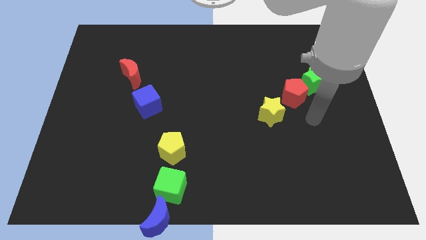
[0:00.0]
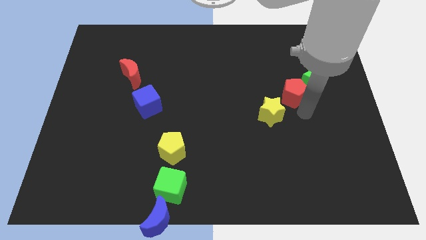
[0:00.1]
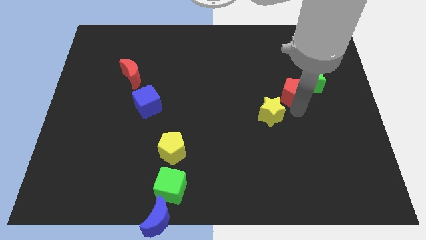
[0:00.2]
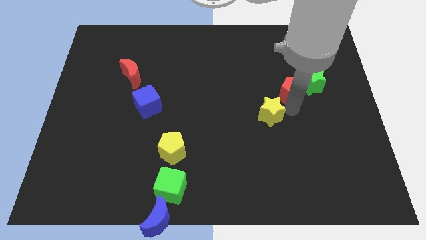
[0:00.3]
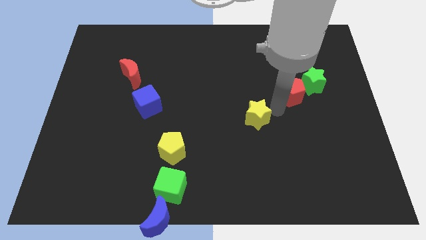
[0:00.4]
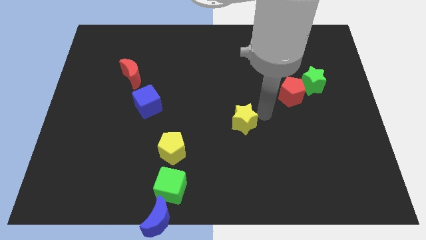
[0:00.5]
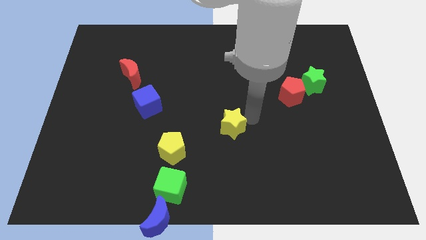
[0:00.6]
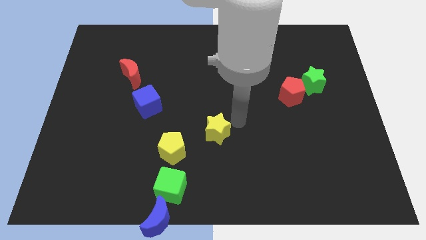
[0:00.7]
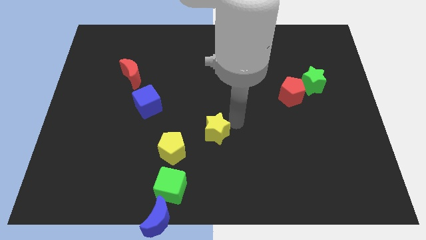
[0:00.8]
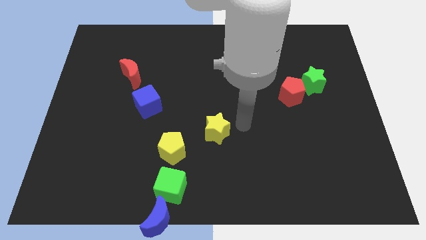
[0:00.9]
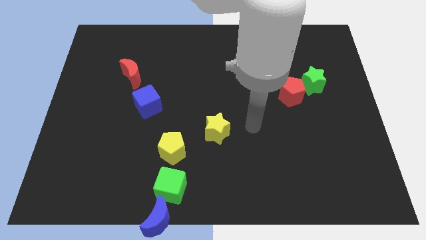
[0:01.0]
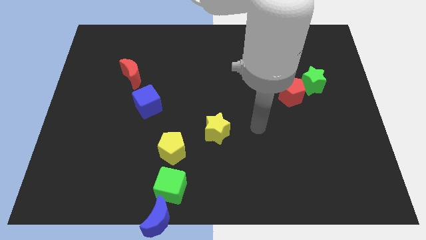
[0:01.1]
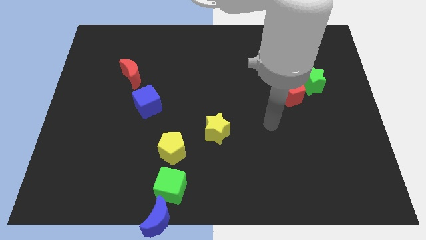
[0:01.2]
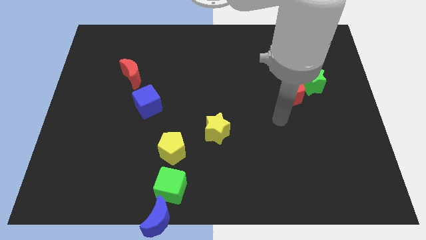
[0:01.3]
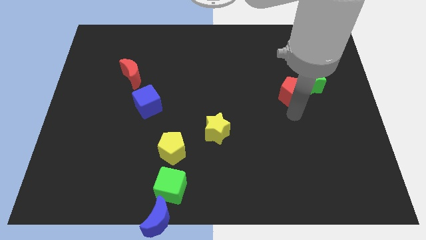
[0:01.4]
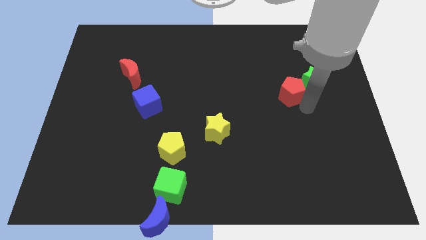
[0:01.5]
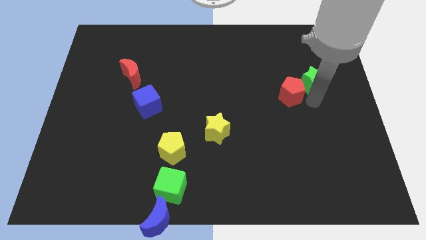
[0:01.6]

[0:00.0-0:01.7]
move the yellow star to the right of the yellow pentagon

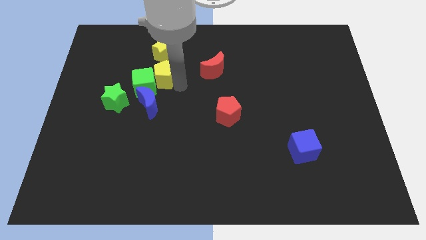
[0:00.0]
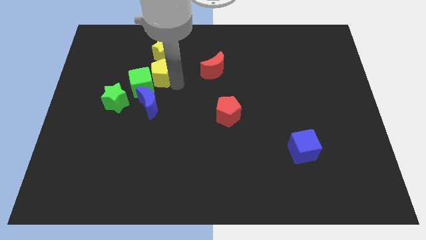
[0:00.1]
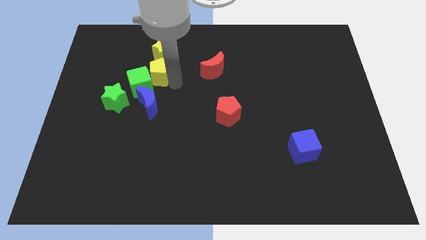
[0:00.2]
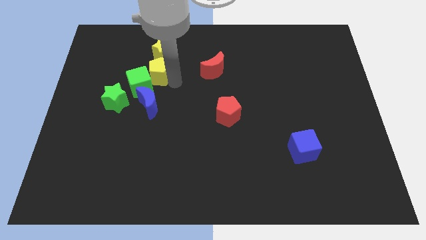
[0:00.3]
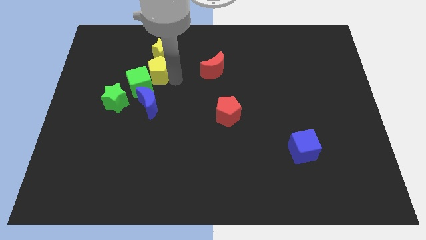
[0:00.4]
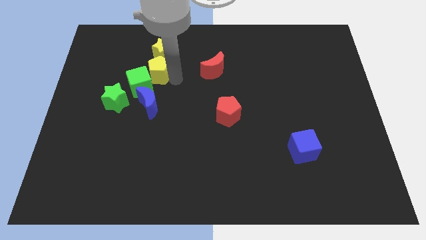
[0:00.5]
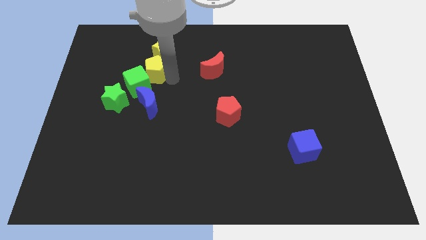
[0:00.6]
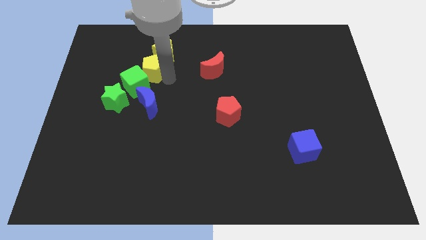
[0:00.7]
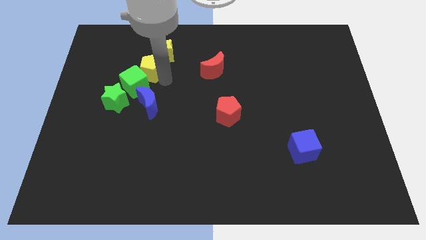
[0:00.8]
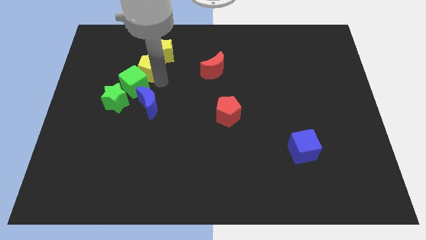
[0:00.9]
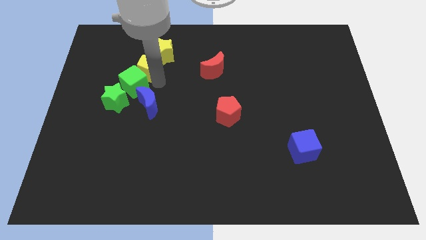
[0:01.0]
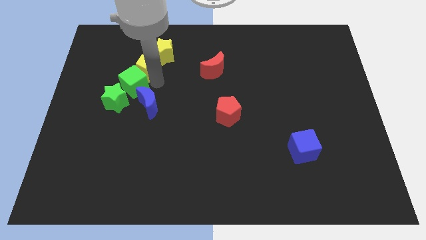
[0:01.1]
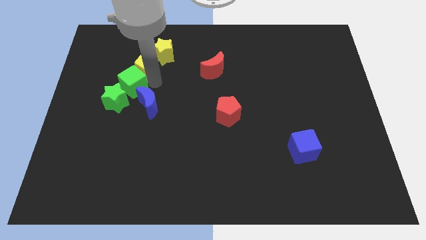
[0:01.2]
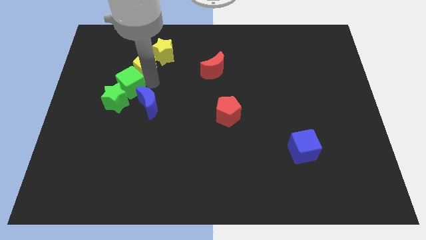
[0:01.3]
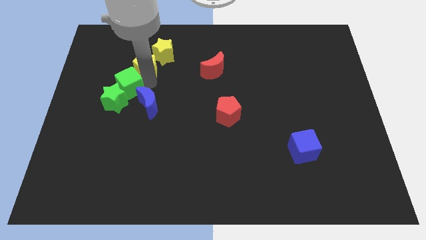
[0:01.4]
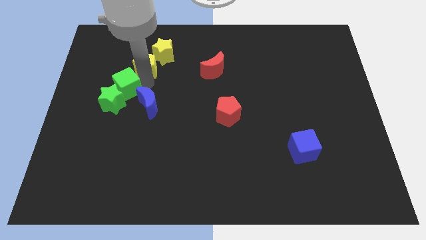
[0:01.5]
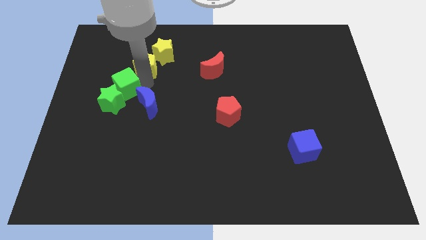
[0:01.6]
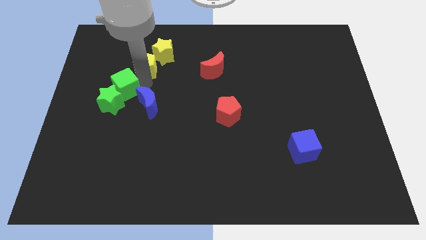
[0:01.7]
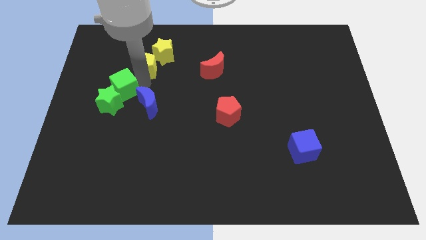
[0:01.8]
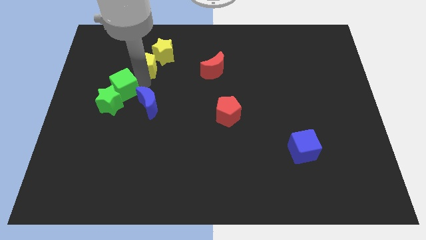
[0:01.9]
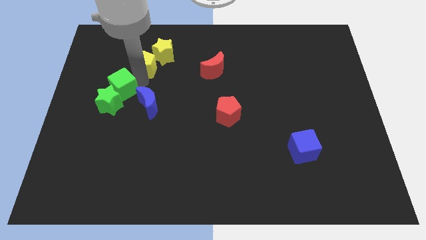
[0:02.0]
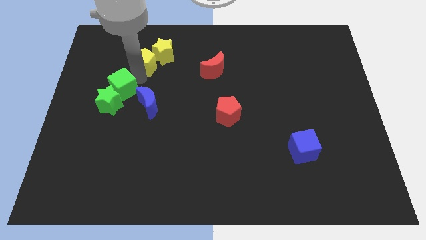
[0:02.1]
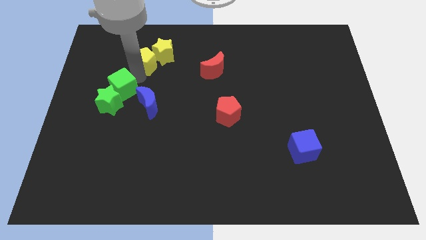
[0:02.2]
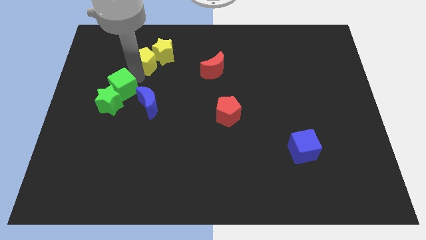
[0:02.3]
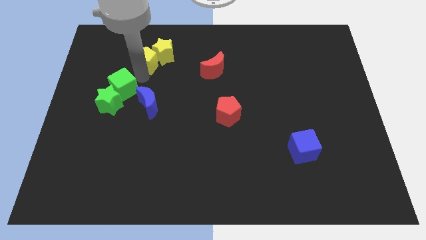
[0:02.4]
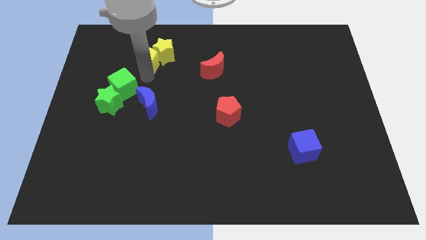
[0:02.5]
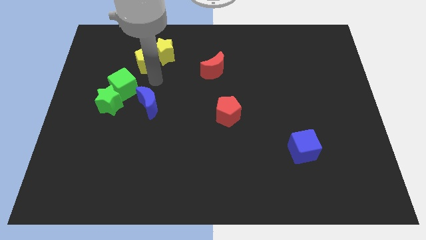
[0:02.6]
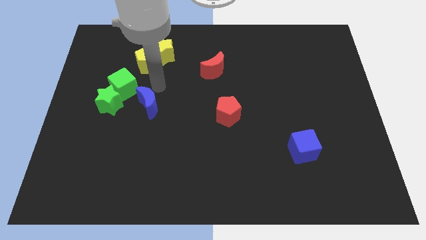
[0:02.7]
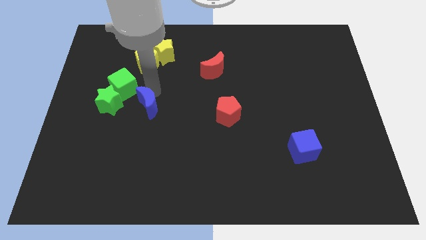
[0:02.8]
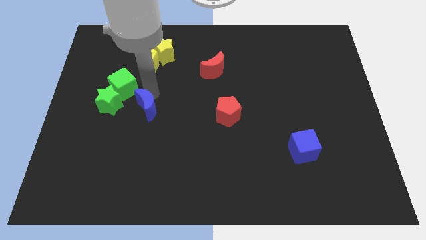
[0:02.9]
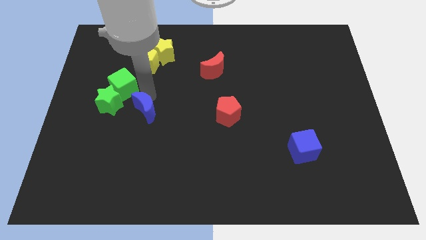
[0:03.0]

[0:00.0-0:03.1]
slide the yellow pentagon at the bottom left of the yellow star

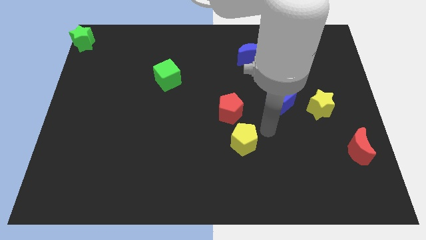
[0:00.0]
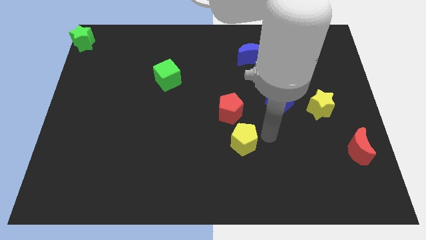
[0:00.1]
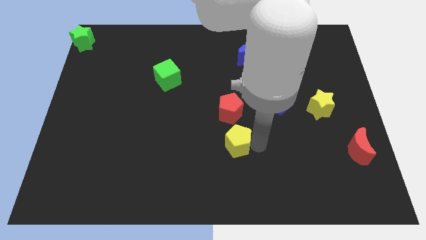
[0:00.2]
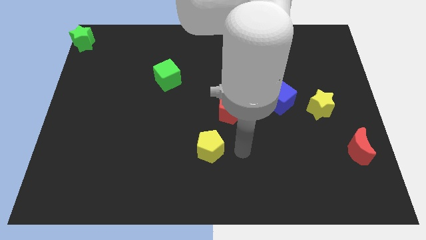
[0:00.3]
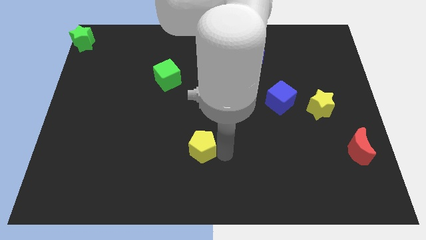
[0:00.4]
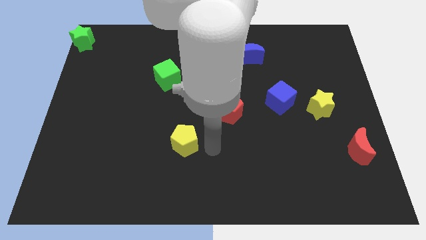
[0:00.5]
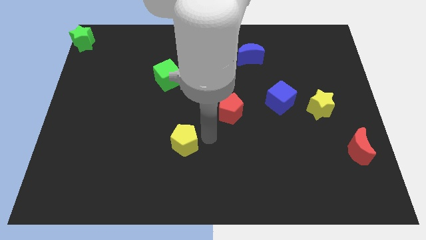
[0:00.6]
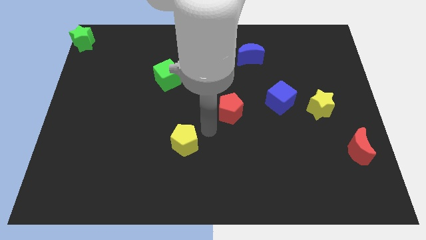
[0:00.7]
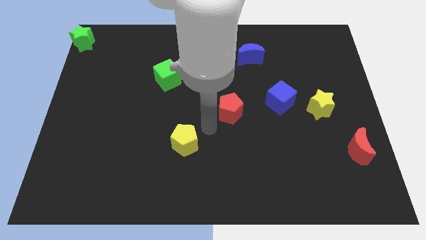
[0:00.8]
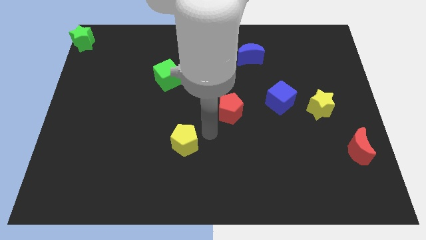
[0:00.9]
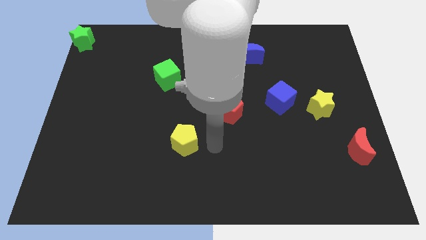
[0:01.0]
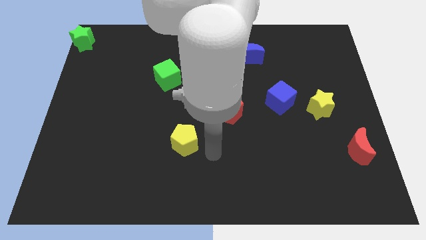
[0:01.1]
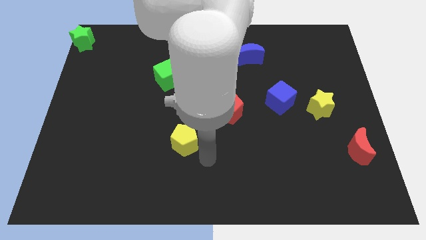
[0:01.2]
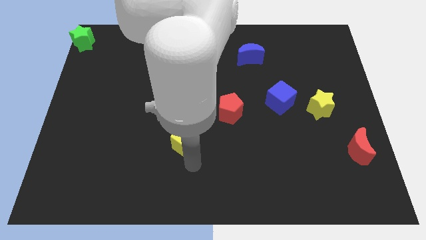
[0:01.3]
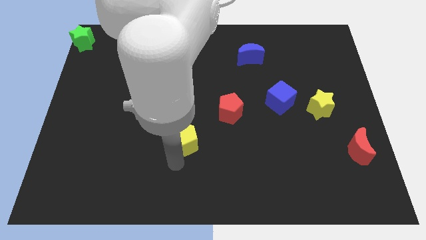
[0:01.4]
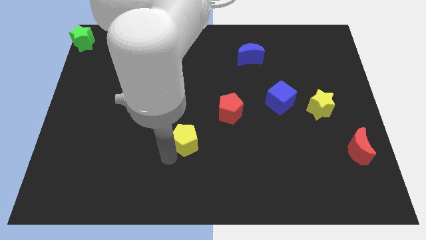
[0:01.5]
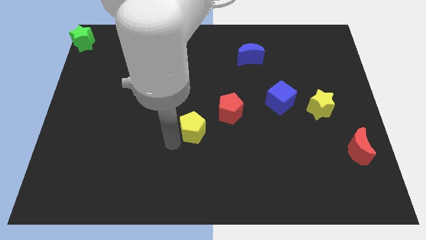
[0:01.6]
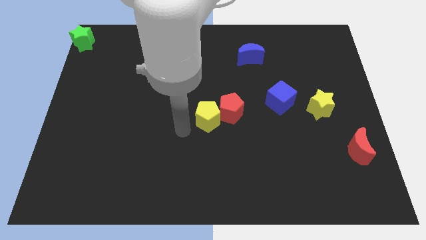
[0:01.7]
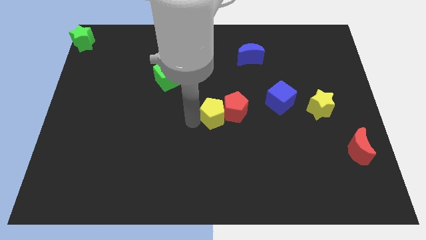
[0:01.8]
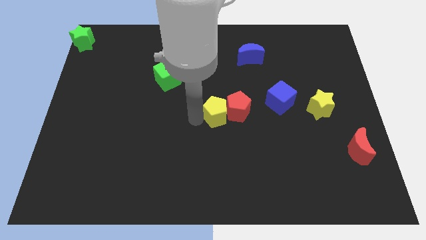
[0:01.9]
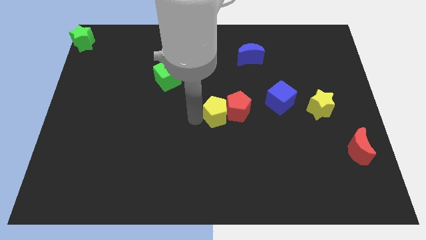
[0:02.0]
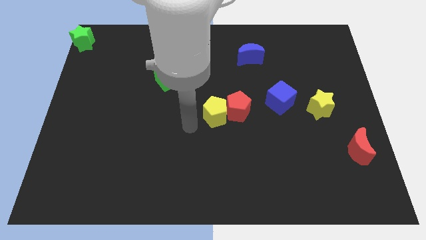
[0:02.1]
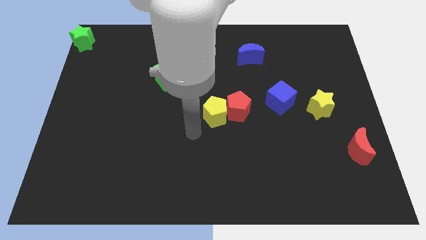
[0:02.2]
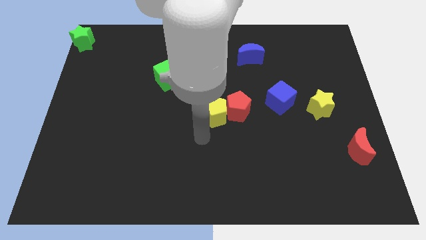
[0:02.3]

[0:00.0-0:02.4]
move the yellow pentagon into the red pentagon

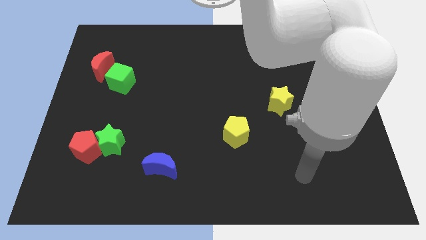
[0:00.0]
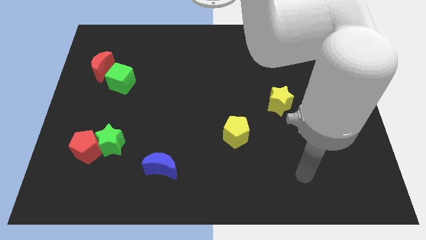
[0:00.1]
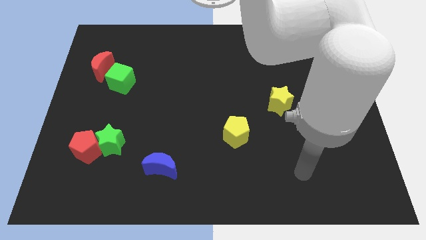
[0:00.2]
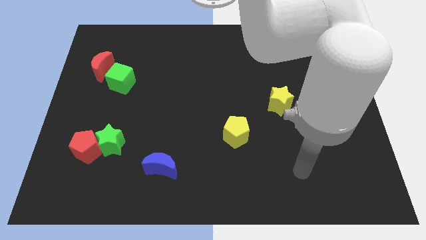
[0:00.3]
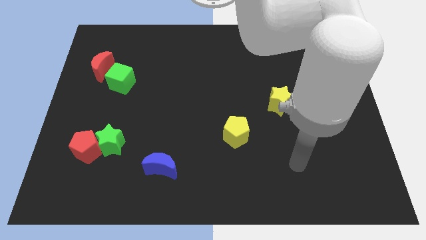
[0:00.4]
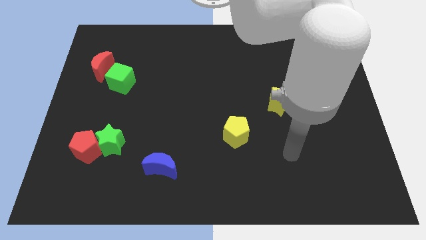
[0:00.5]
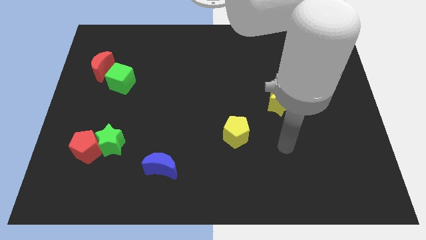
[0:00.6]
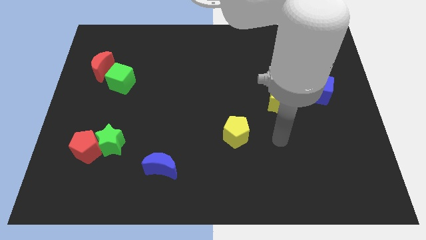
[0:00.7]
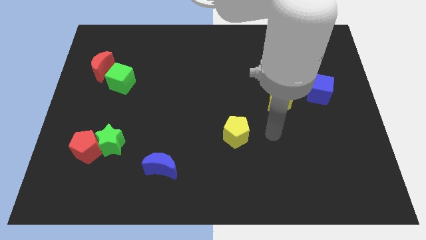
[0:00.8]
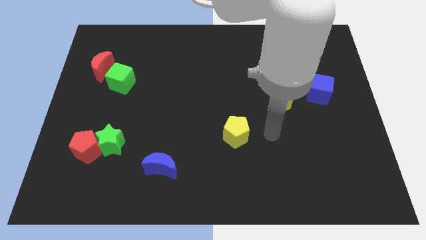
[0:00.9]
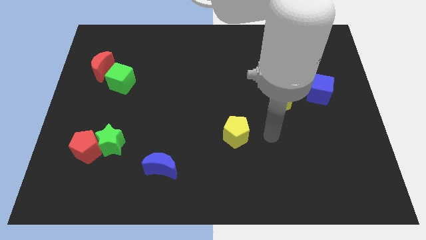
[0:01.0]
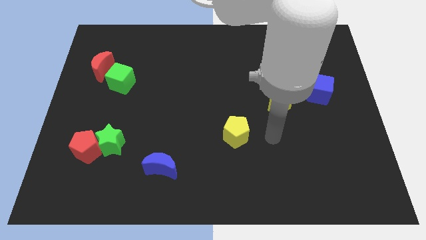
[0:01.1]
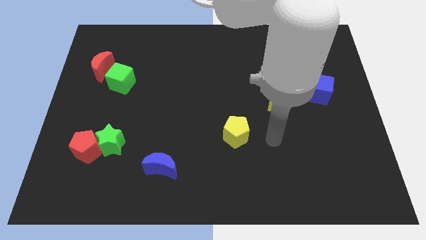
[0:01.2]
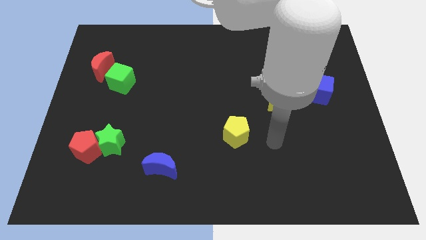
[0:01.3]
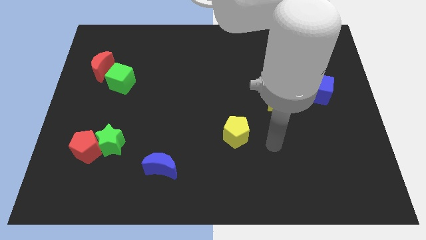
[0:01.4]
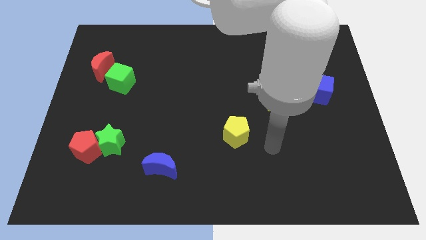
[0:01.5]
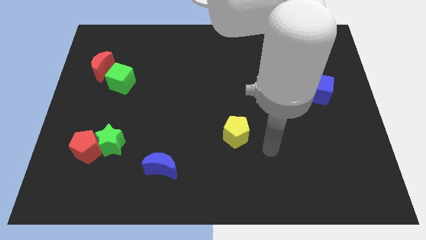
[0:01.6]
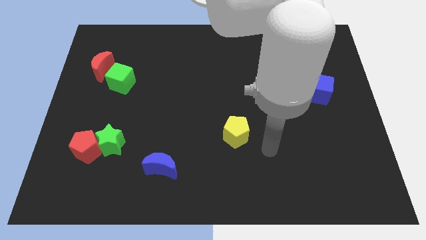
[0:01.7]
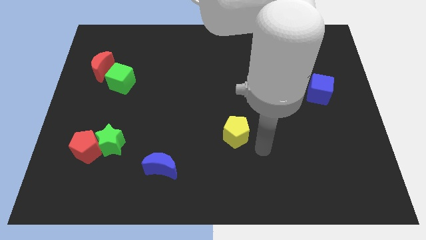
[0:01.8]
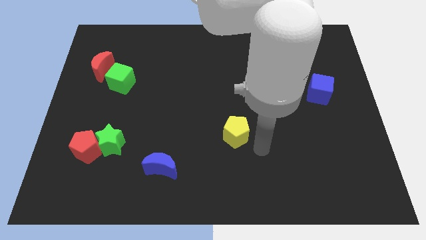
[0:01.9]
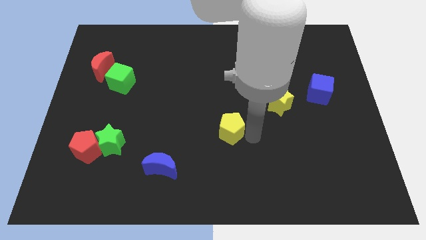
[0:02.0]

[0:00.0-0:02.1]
move your arm close to the yellow pentagon
